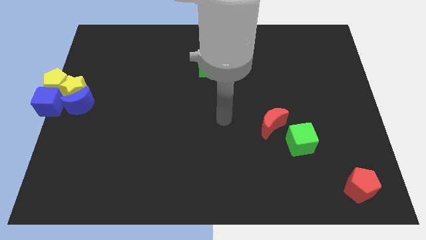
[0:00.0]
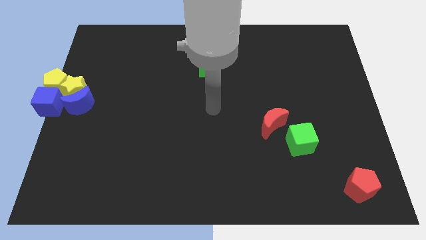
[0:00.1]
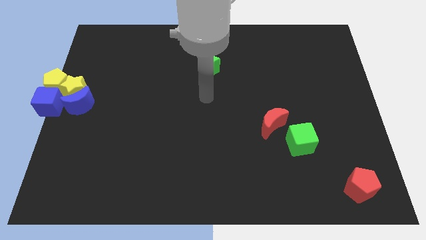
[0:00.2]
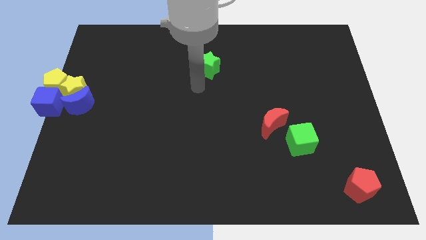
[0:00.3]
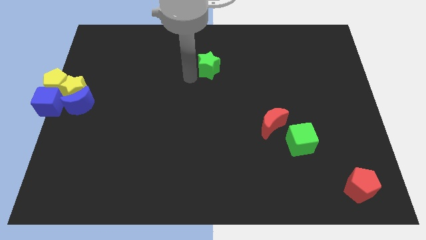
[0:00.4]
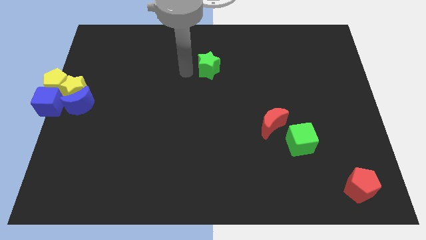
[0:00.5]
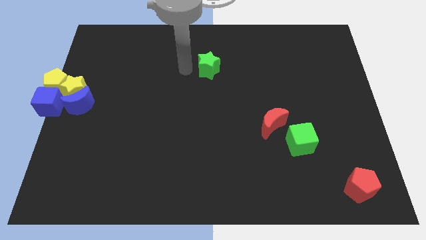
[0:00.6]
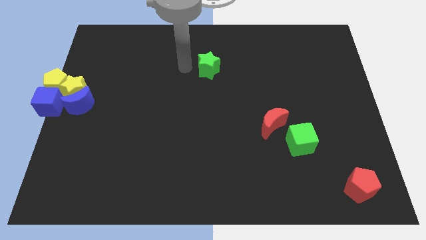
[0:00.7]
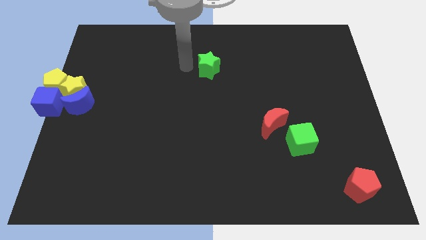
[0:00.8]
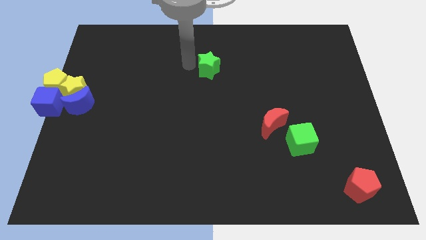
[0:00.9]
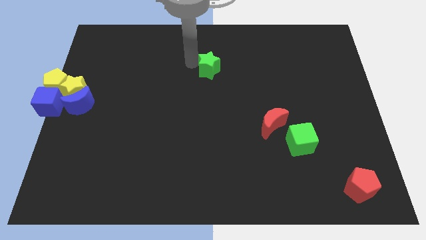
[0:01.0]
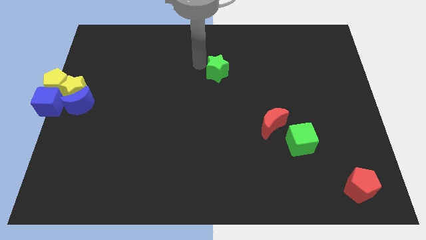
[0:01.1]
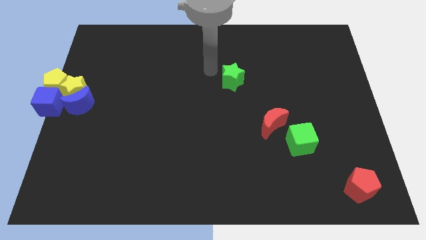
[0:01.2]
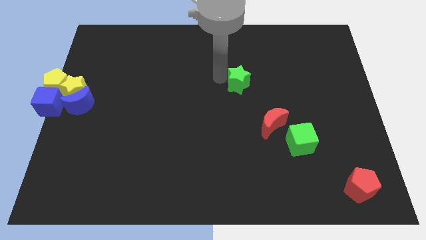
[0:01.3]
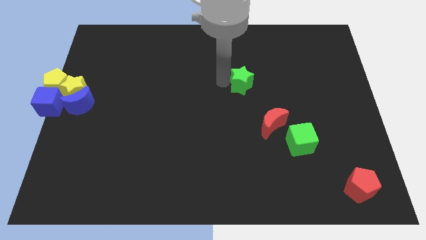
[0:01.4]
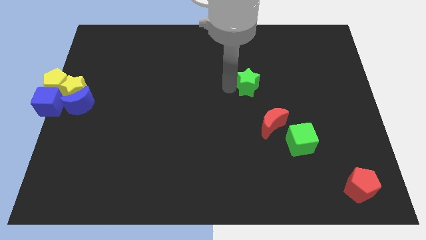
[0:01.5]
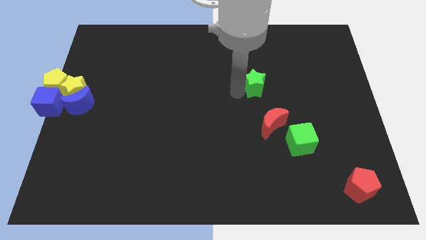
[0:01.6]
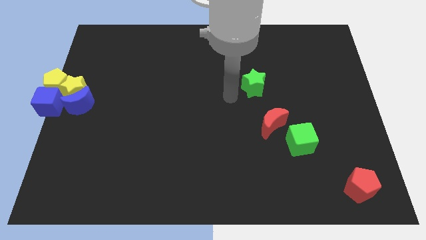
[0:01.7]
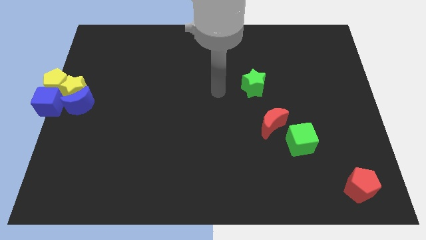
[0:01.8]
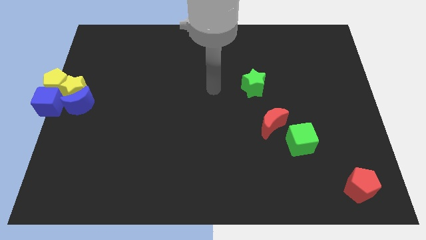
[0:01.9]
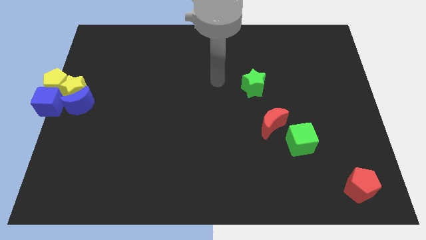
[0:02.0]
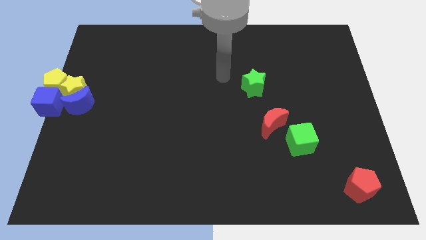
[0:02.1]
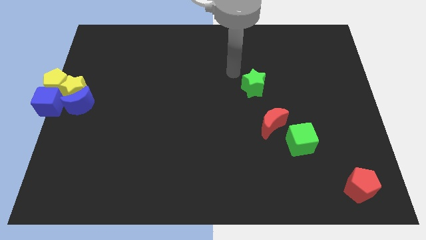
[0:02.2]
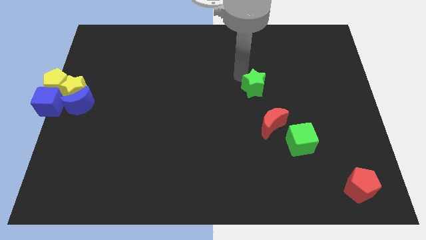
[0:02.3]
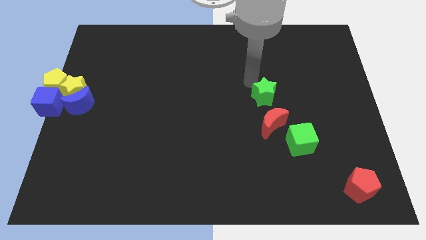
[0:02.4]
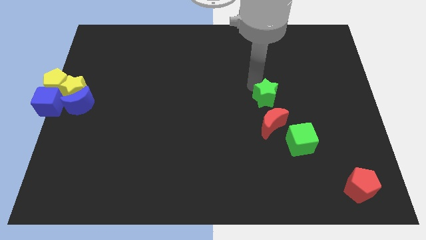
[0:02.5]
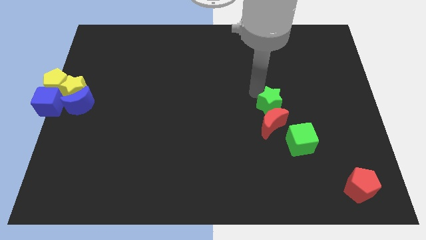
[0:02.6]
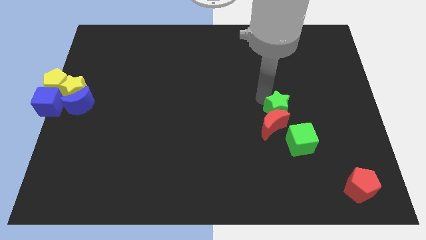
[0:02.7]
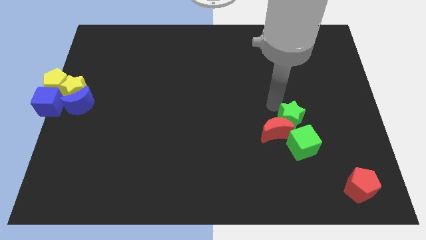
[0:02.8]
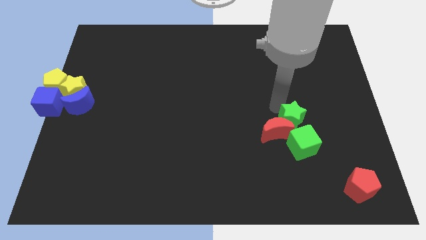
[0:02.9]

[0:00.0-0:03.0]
push the green star into the red moon

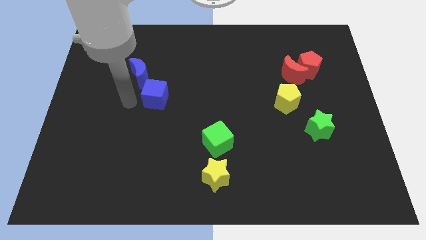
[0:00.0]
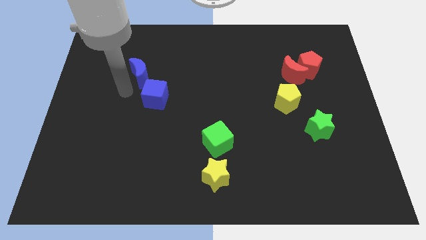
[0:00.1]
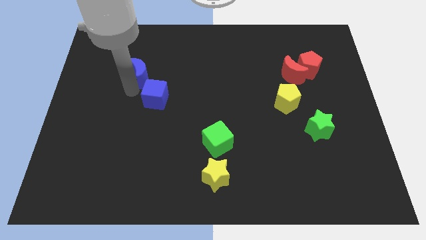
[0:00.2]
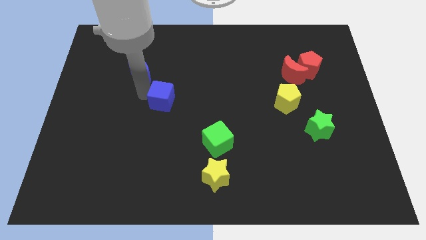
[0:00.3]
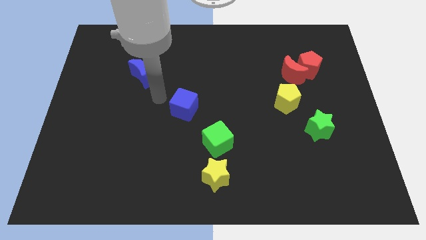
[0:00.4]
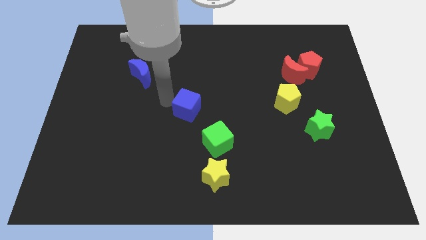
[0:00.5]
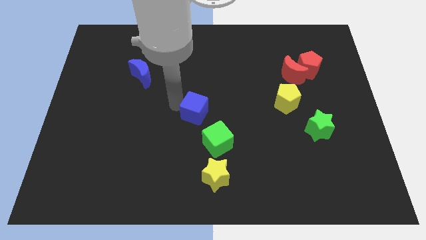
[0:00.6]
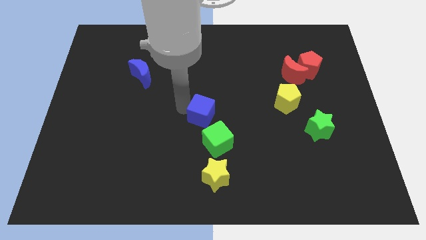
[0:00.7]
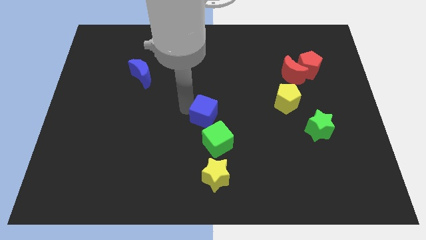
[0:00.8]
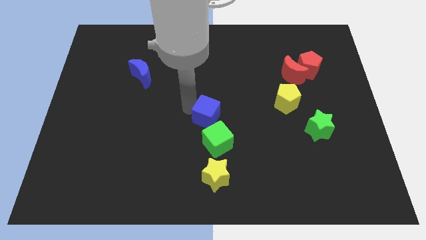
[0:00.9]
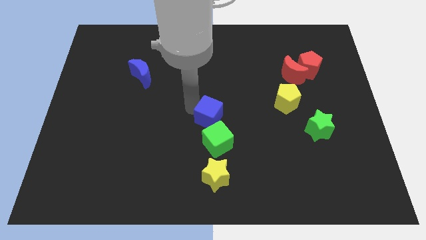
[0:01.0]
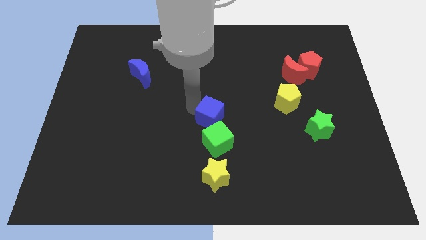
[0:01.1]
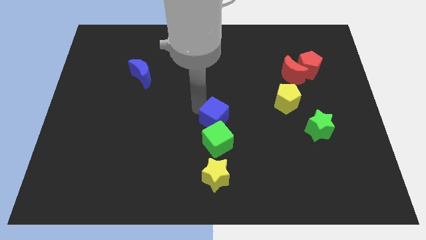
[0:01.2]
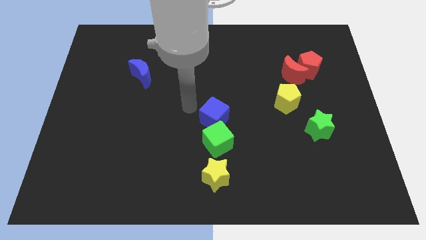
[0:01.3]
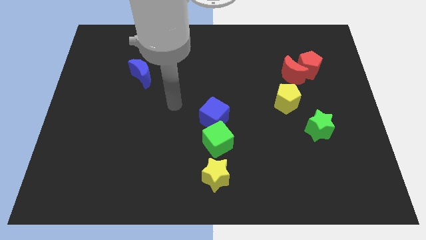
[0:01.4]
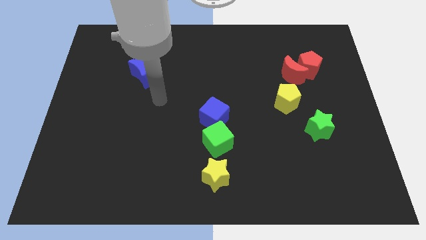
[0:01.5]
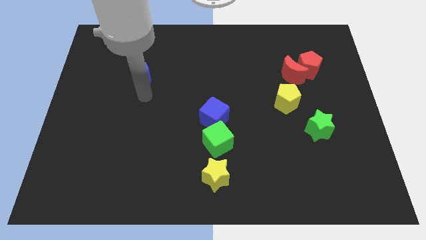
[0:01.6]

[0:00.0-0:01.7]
place blue cube on top of the green cube towards the middle of board

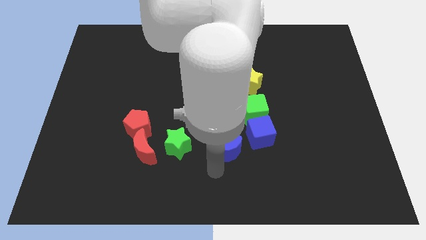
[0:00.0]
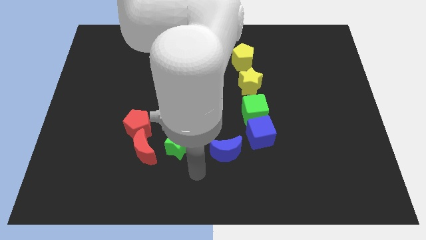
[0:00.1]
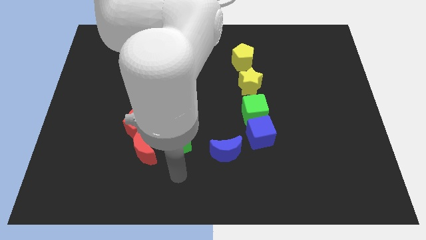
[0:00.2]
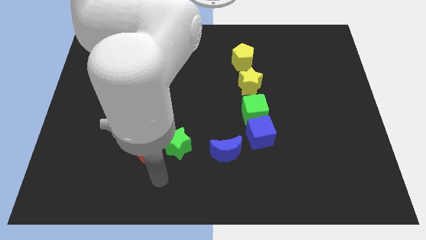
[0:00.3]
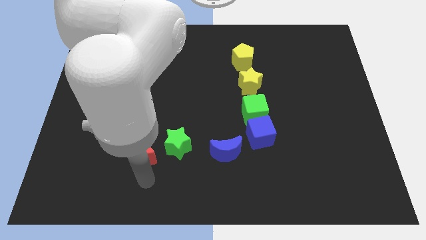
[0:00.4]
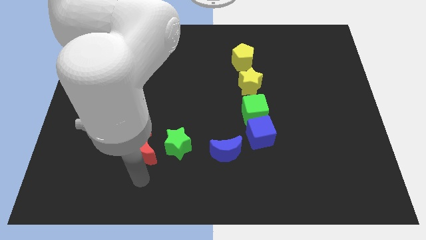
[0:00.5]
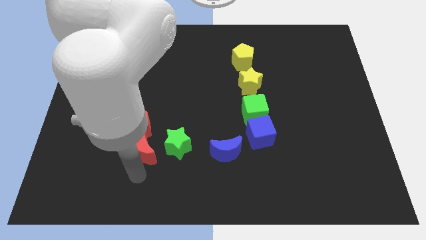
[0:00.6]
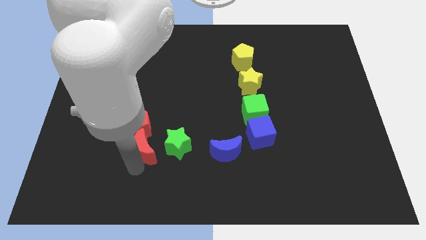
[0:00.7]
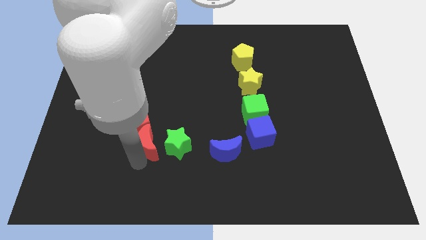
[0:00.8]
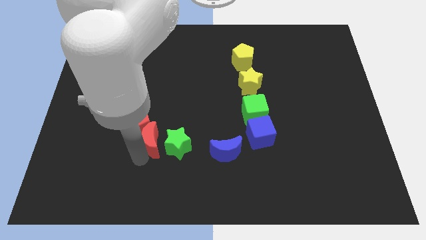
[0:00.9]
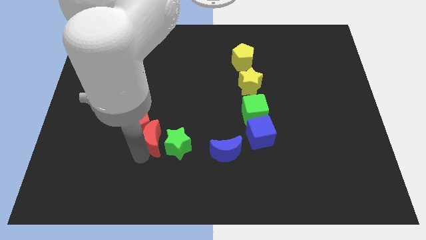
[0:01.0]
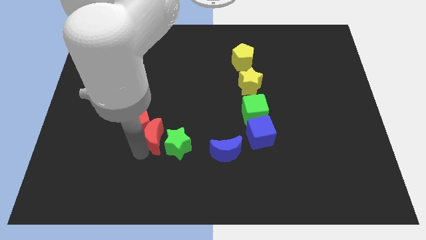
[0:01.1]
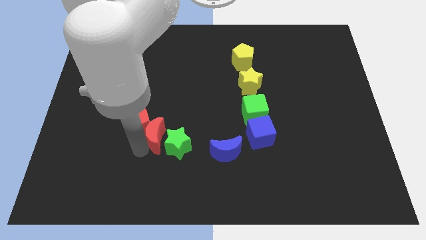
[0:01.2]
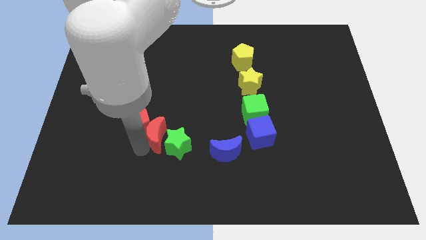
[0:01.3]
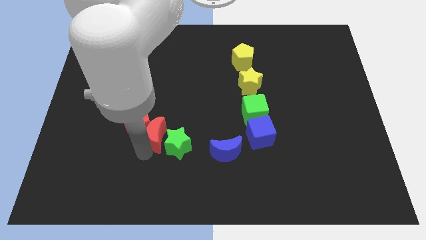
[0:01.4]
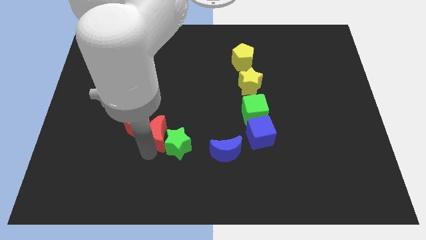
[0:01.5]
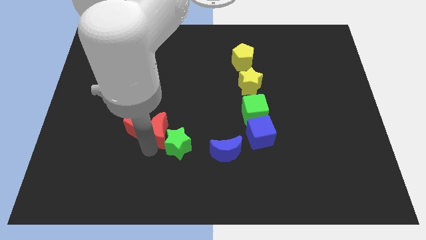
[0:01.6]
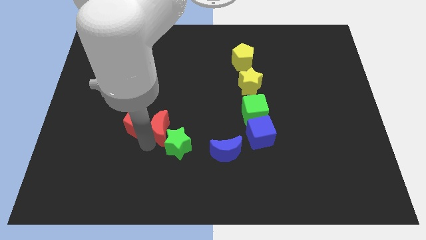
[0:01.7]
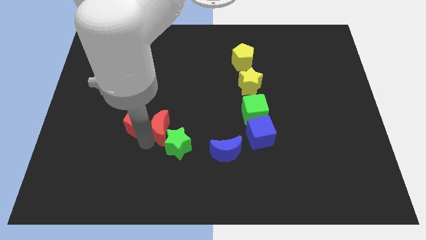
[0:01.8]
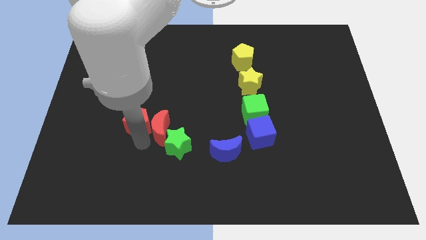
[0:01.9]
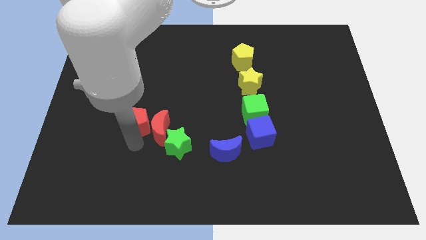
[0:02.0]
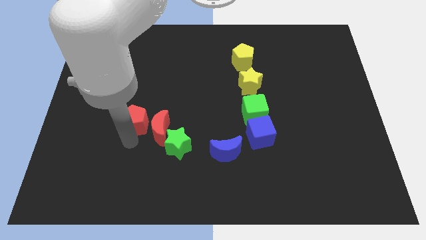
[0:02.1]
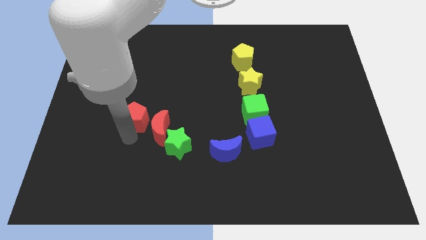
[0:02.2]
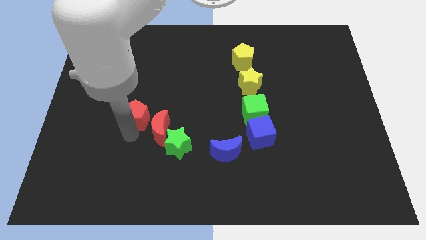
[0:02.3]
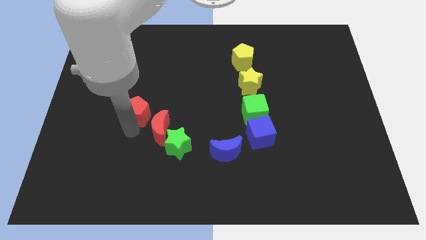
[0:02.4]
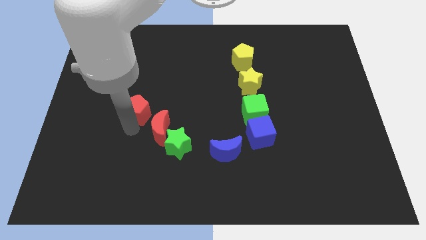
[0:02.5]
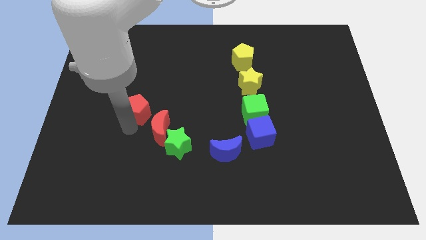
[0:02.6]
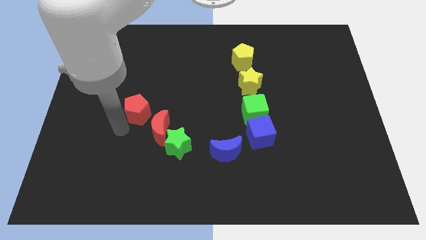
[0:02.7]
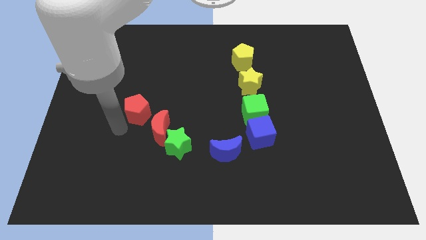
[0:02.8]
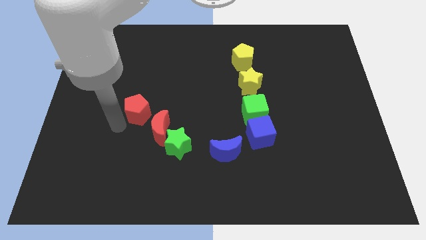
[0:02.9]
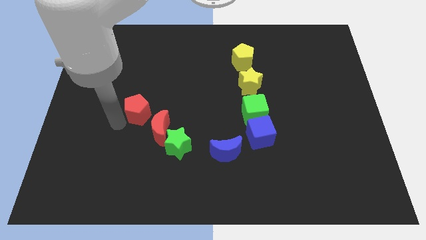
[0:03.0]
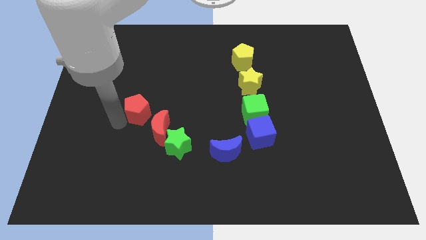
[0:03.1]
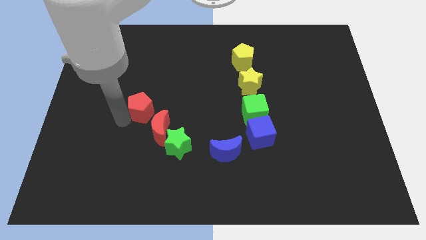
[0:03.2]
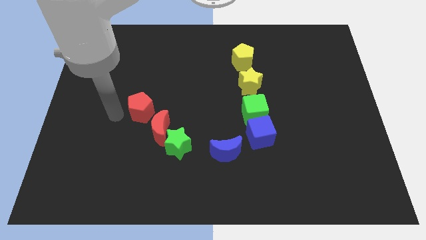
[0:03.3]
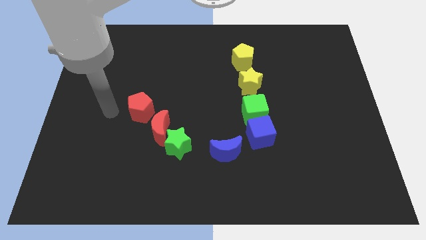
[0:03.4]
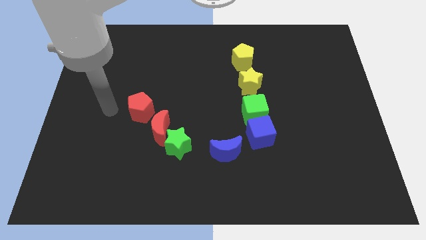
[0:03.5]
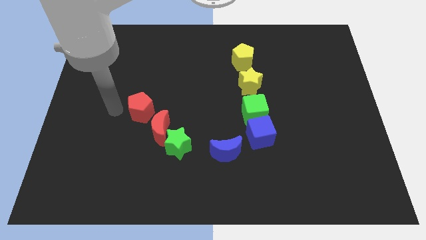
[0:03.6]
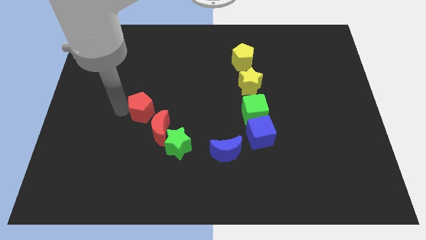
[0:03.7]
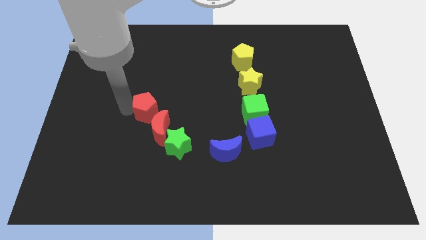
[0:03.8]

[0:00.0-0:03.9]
place the red crescent and red pentagon diagonally to the top left side of the green star

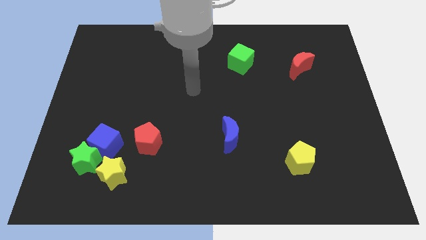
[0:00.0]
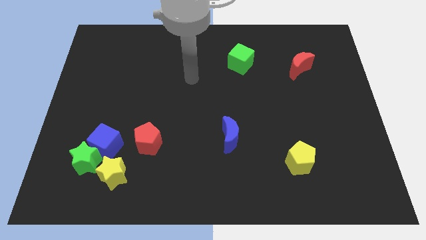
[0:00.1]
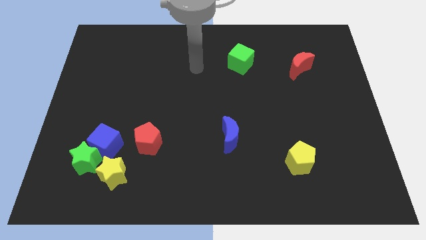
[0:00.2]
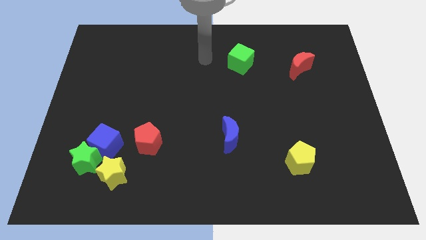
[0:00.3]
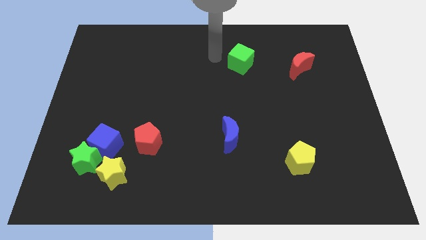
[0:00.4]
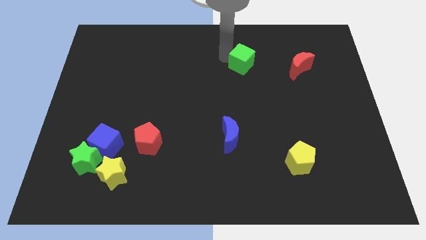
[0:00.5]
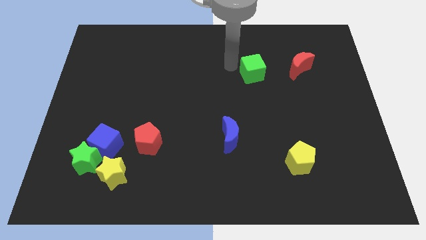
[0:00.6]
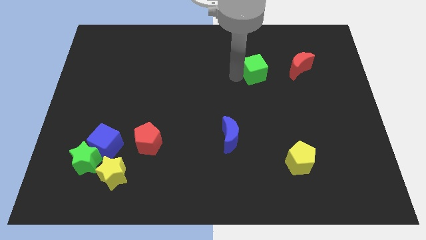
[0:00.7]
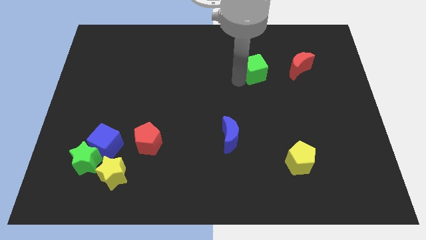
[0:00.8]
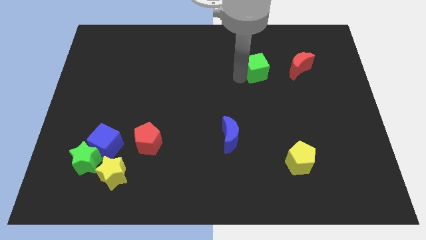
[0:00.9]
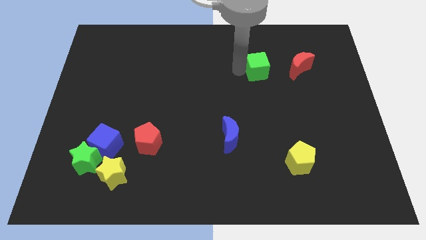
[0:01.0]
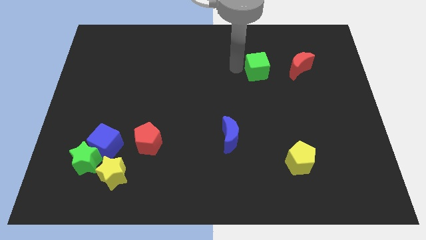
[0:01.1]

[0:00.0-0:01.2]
push the green cube to the right of the board
